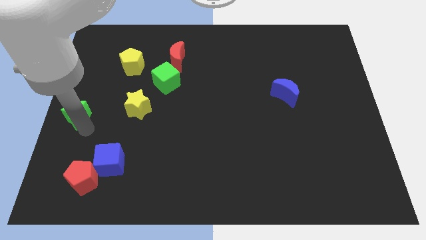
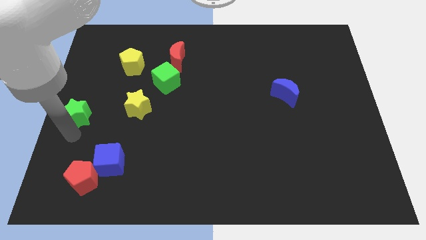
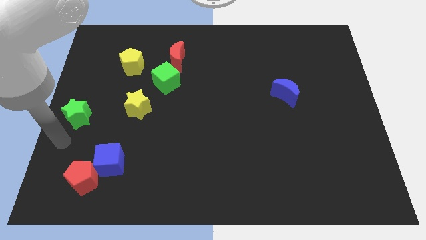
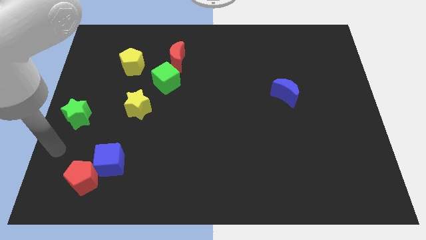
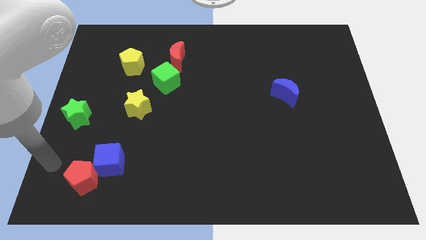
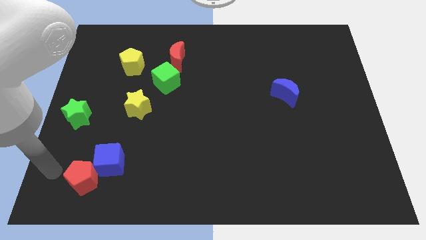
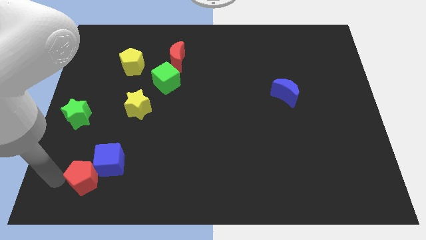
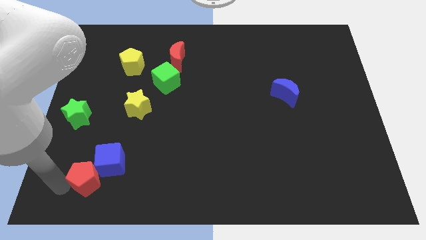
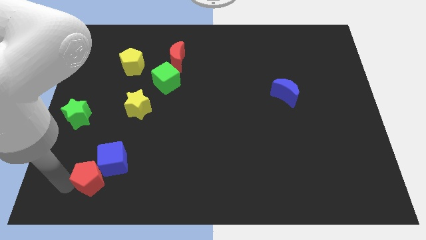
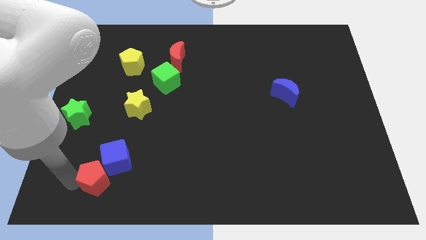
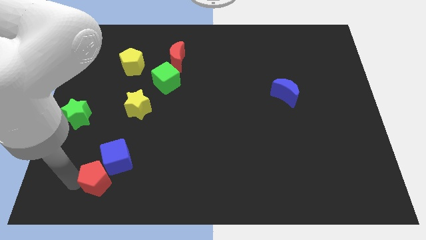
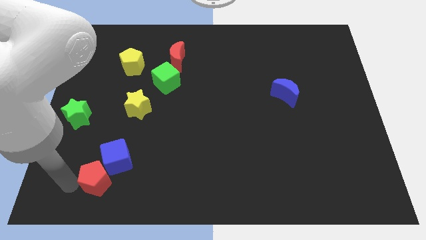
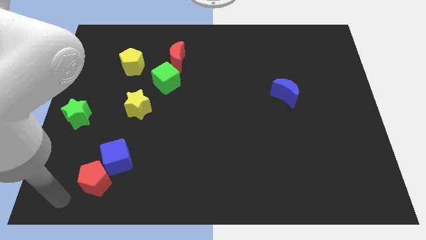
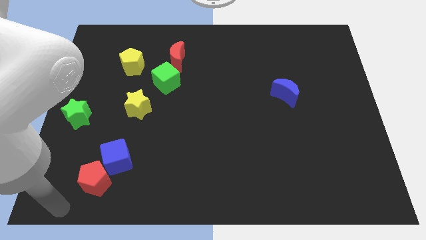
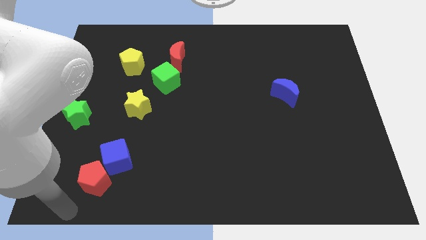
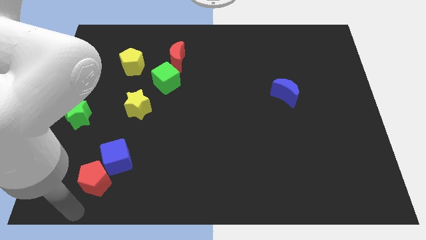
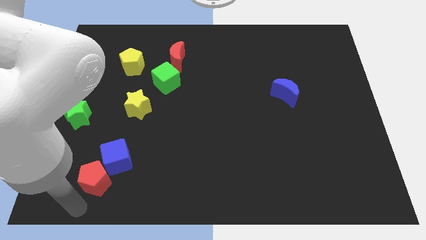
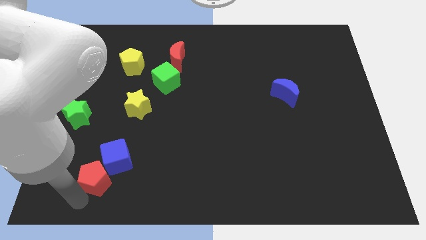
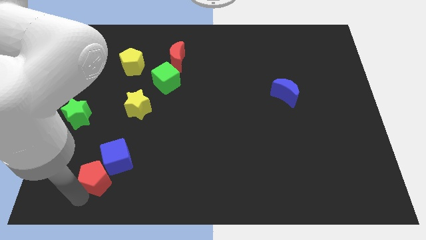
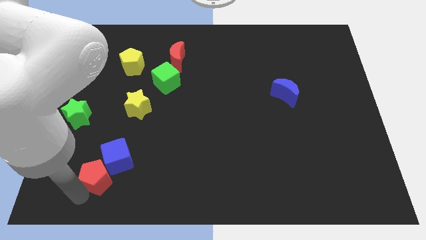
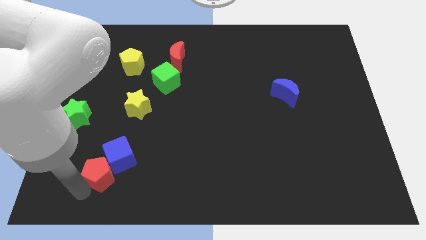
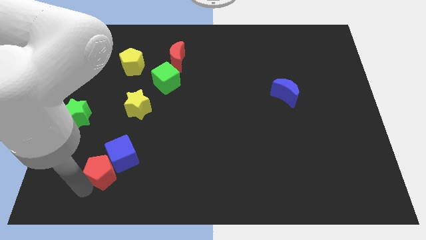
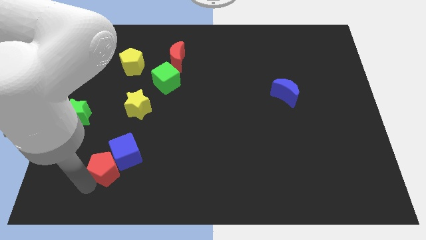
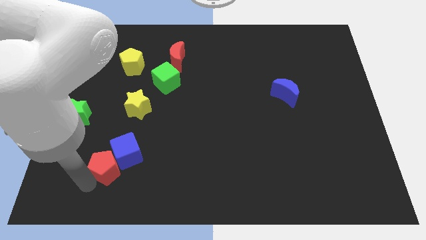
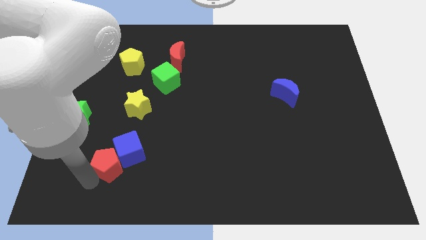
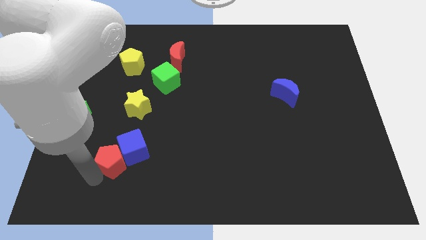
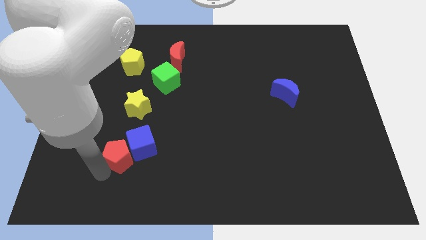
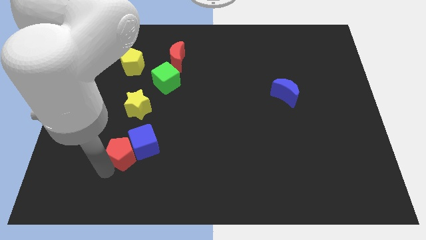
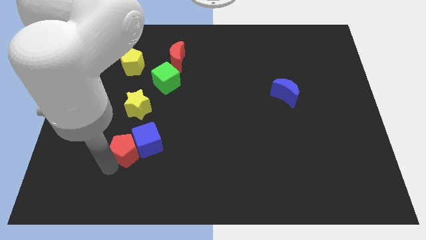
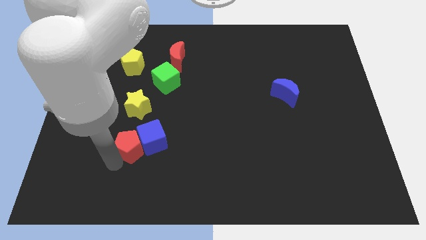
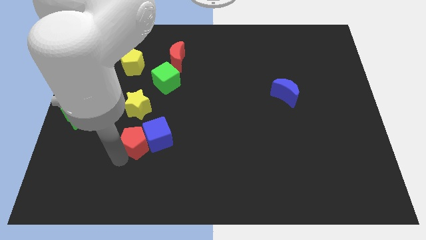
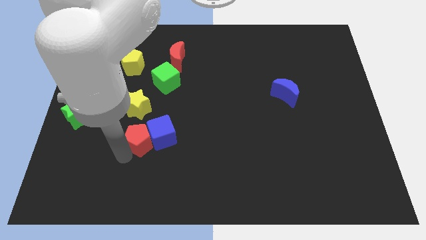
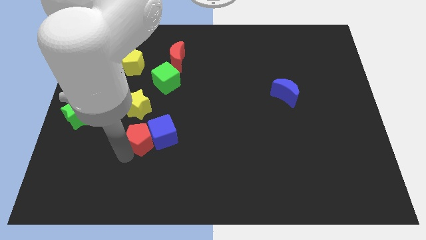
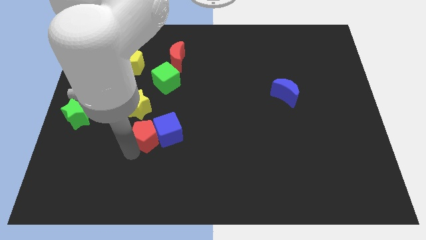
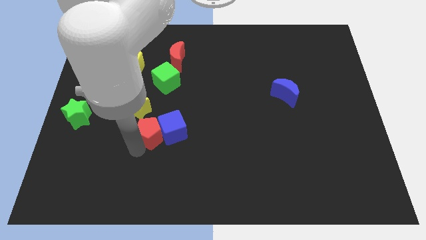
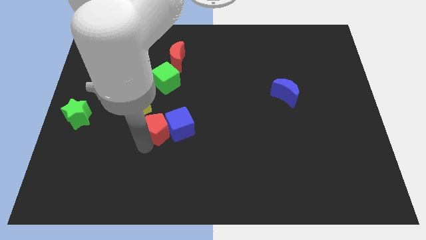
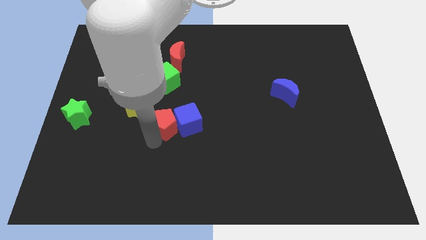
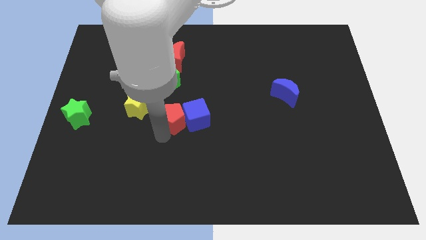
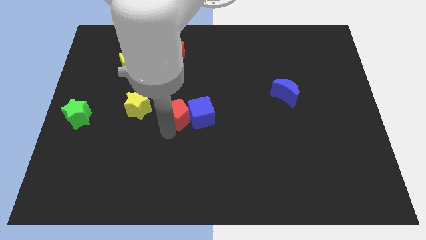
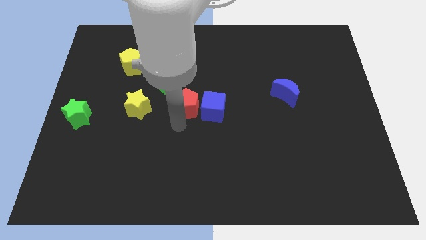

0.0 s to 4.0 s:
slide the red pentagon and blue cube to the center of the board

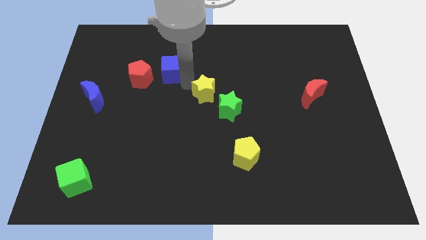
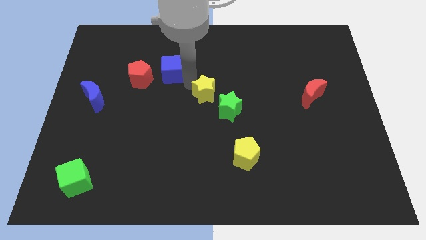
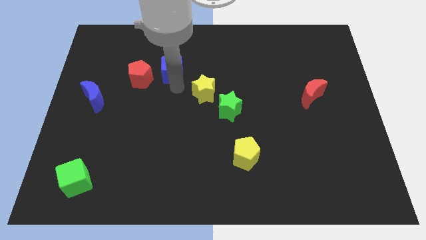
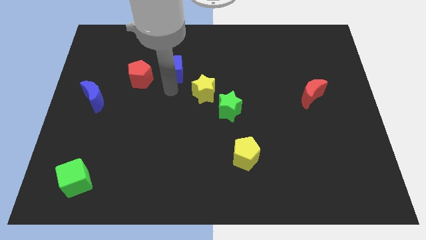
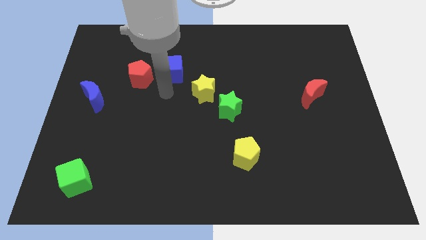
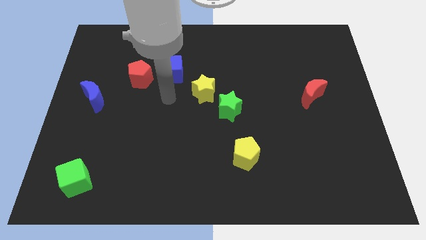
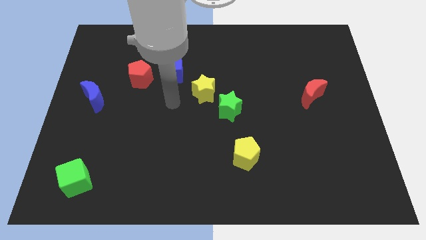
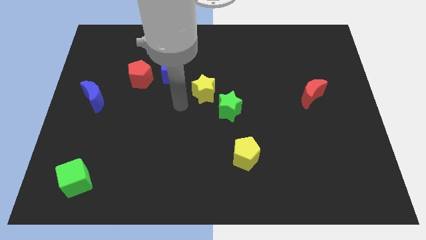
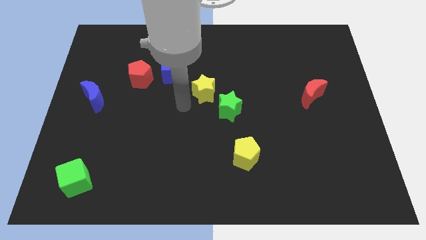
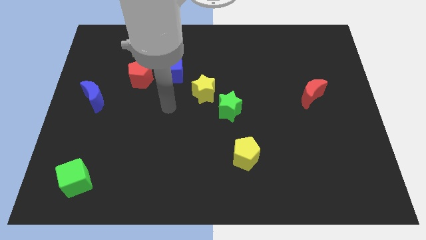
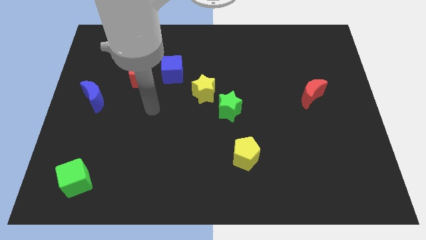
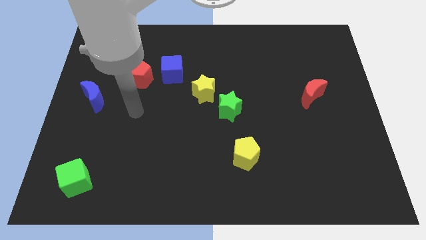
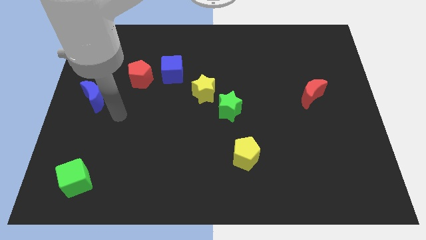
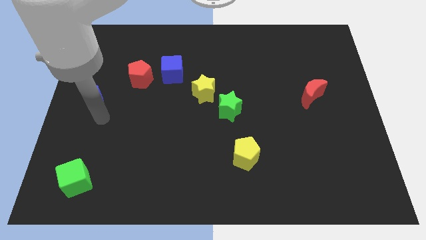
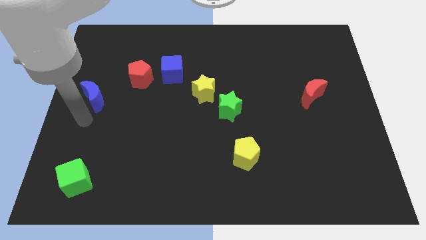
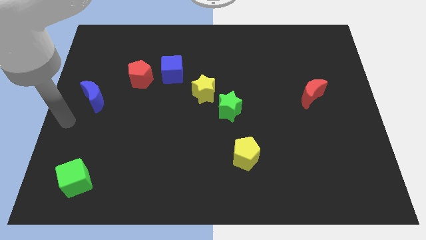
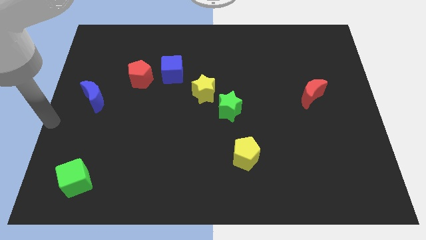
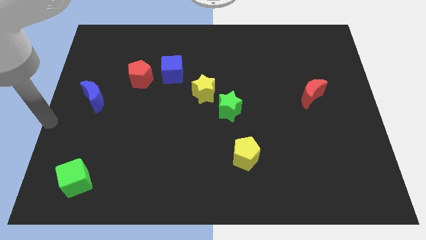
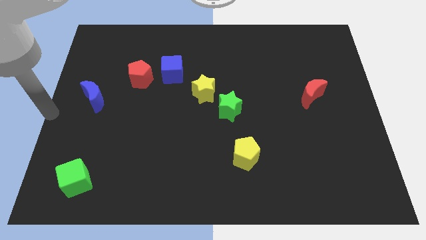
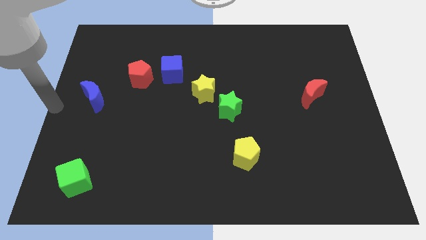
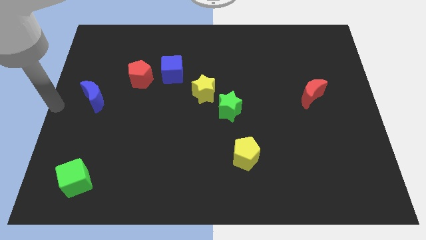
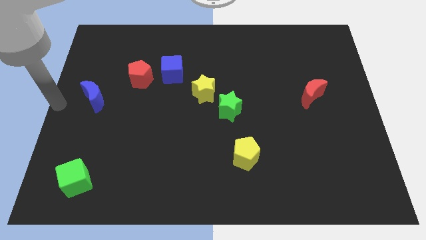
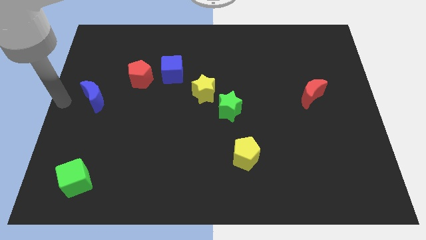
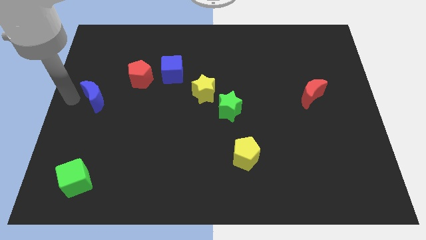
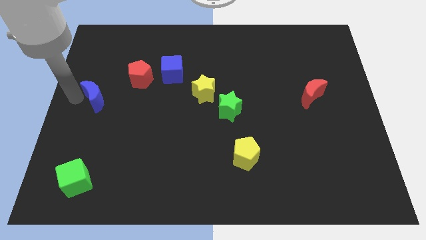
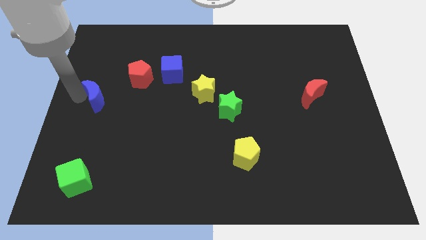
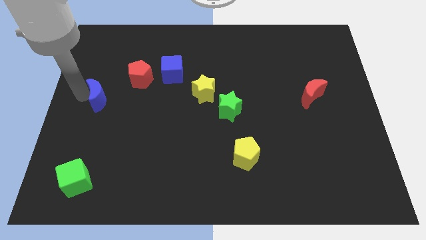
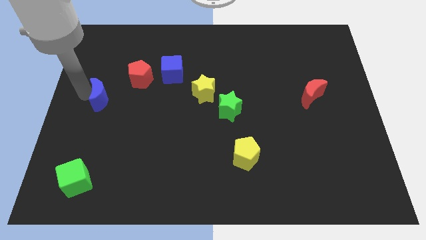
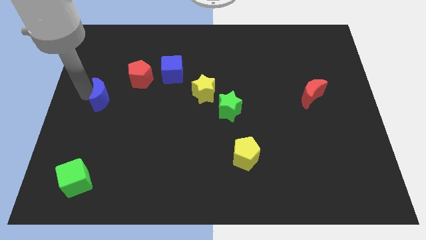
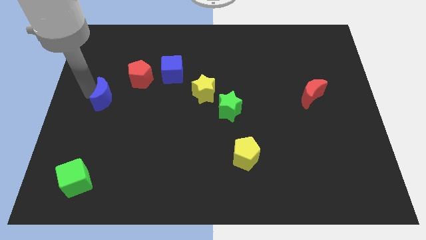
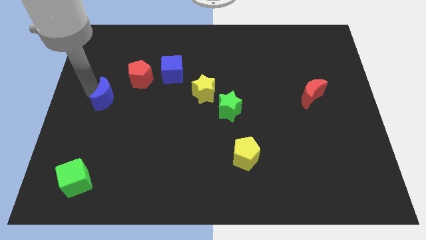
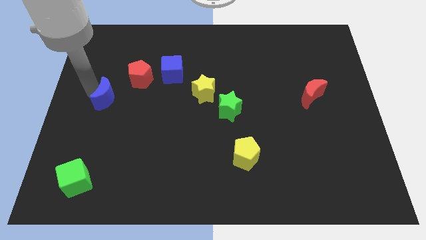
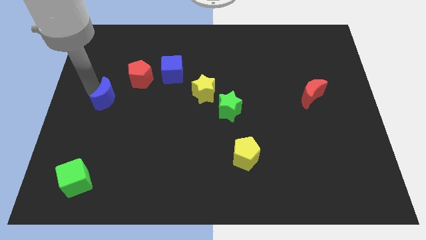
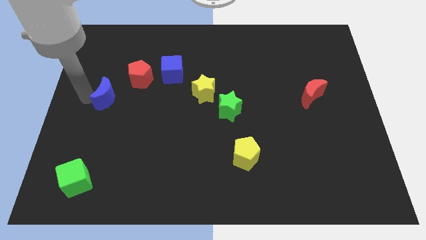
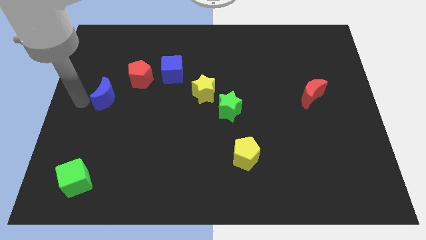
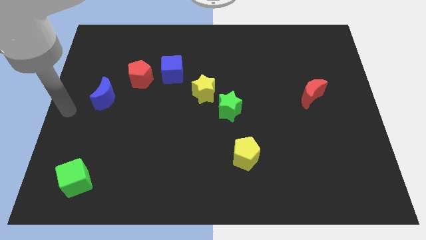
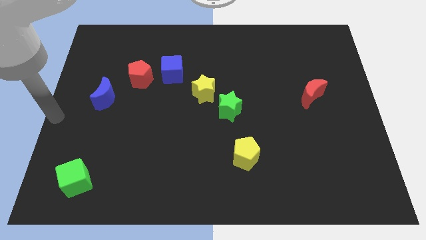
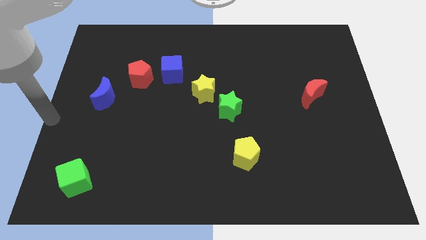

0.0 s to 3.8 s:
slightly push the blue moon to the right side of the board

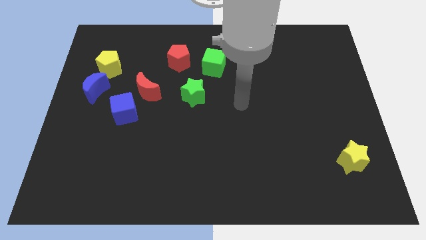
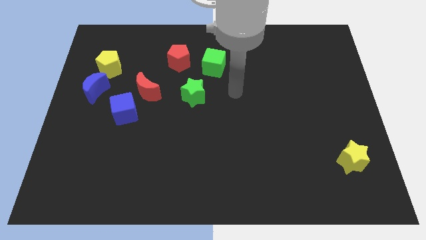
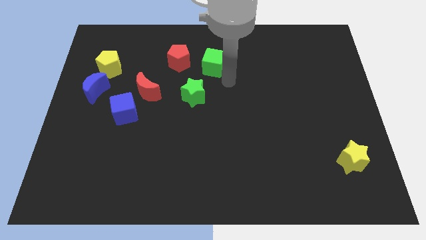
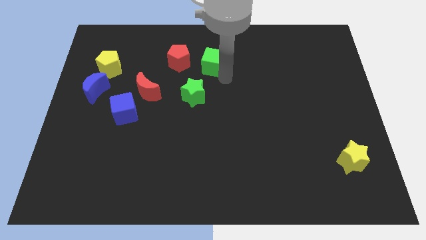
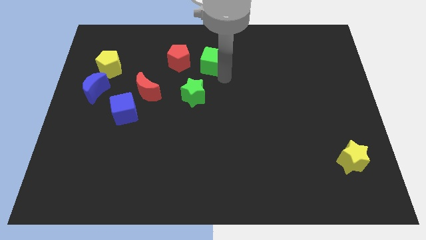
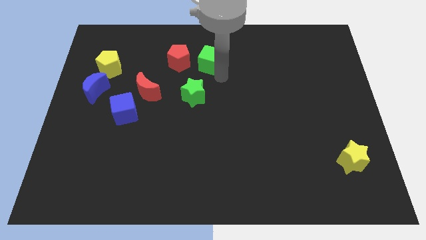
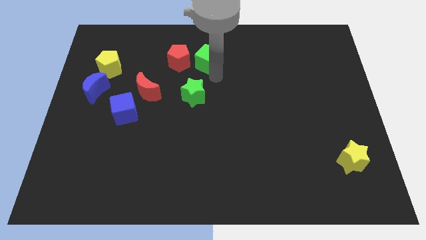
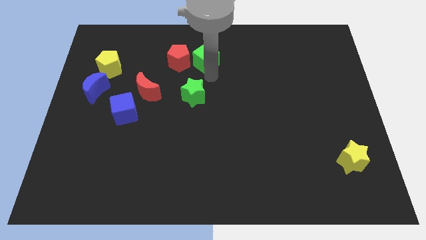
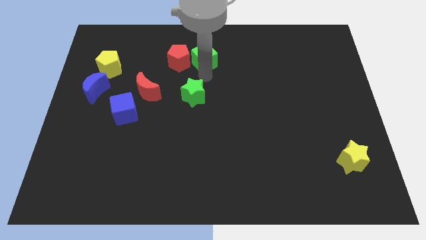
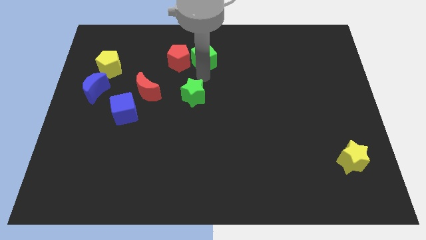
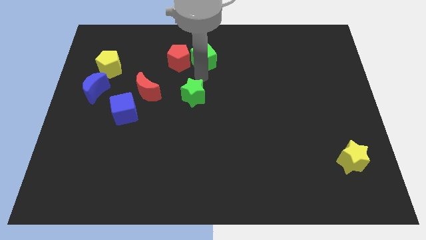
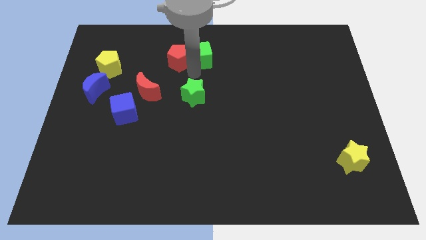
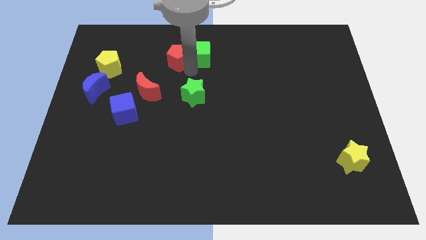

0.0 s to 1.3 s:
move green cube into red pentagon
